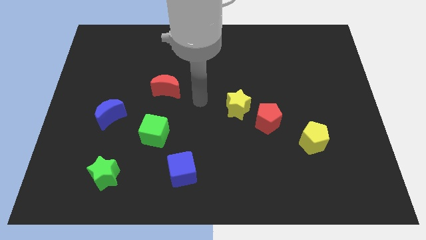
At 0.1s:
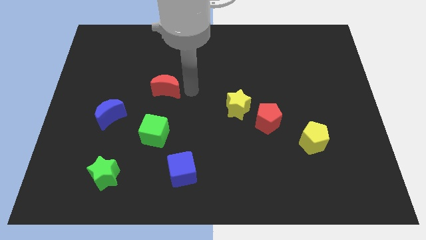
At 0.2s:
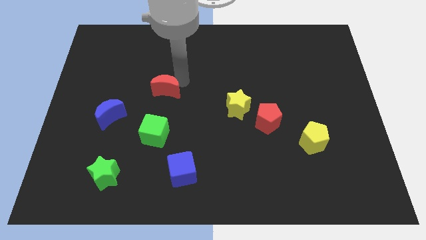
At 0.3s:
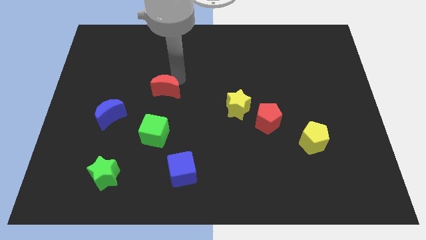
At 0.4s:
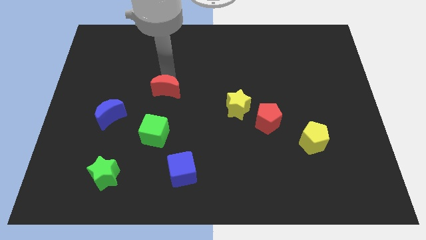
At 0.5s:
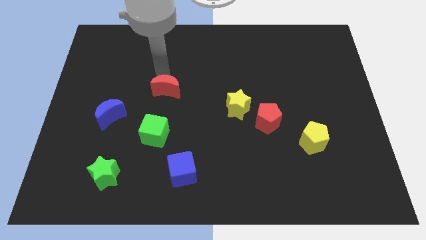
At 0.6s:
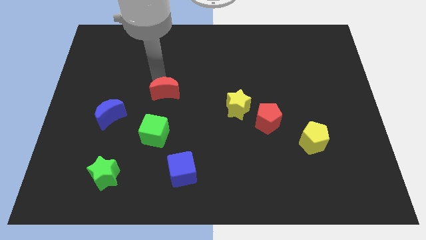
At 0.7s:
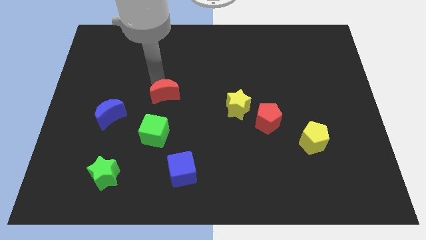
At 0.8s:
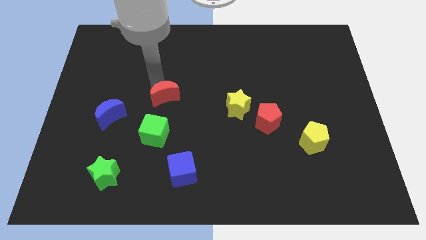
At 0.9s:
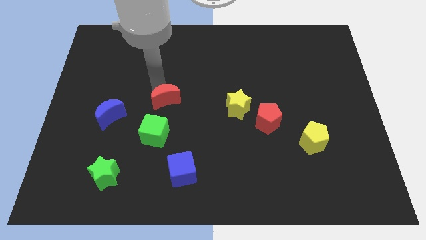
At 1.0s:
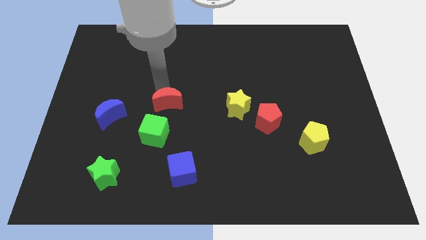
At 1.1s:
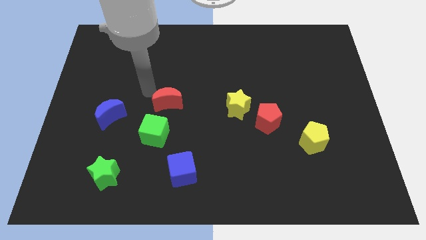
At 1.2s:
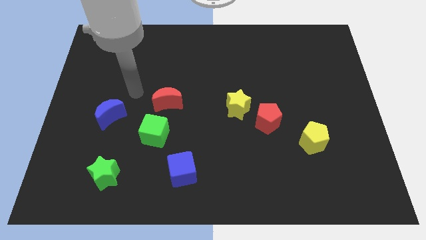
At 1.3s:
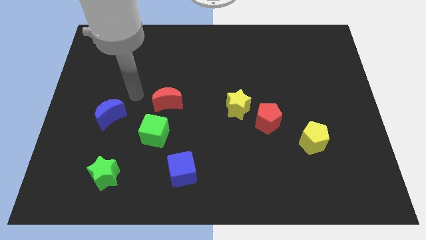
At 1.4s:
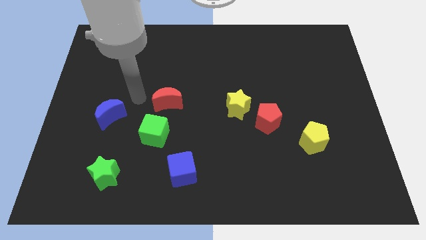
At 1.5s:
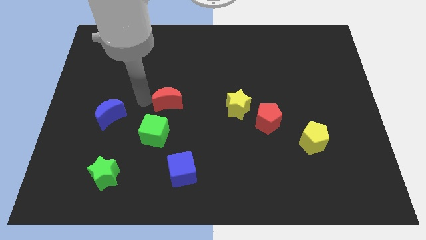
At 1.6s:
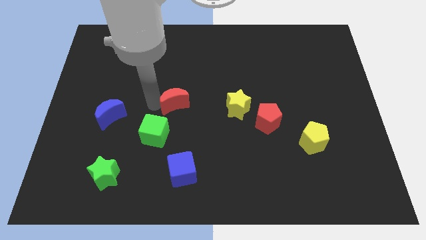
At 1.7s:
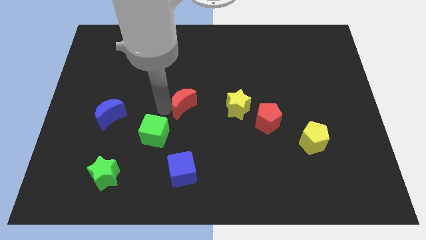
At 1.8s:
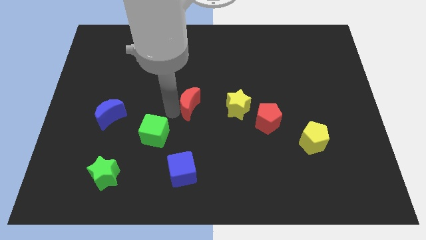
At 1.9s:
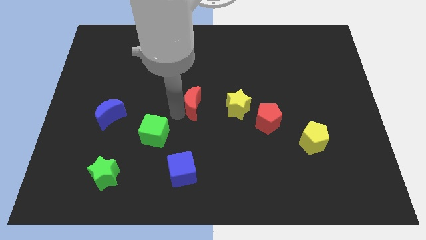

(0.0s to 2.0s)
move the red moon to the left of the yellow star

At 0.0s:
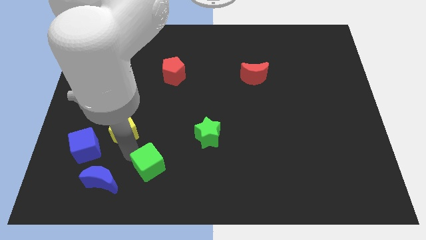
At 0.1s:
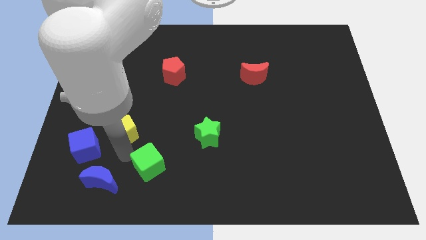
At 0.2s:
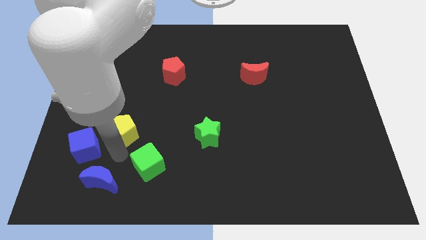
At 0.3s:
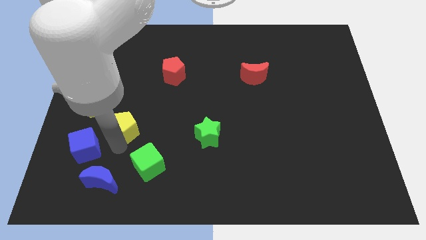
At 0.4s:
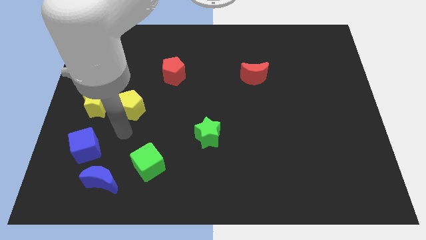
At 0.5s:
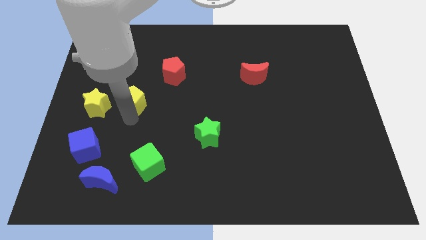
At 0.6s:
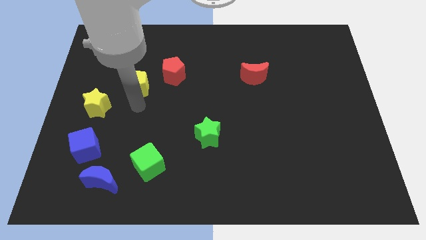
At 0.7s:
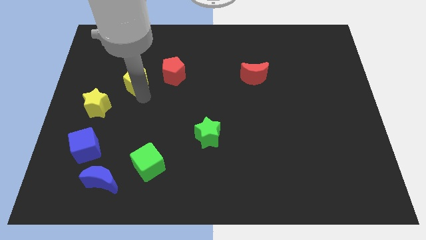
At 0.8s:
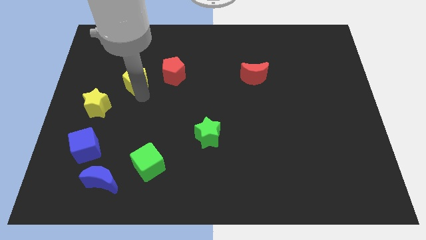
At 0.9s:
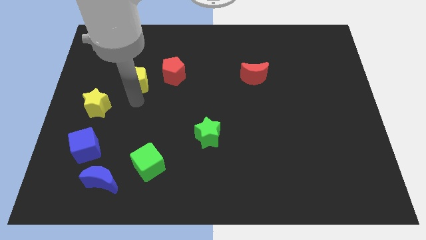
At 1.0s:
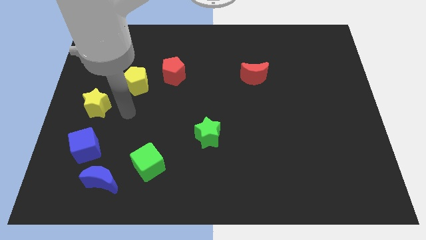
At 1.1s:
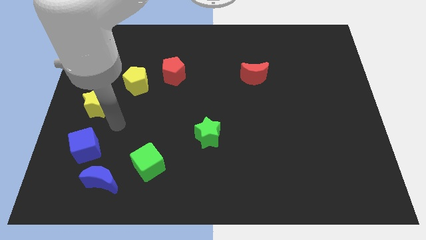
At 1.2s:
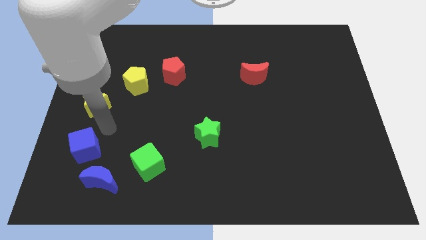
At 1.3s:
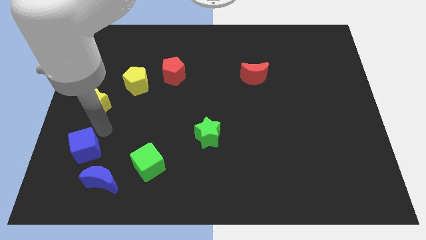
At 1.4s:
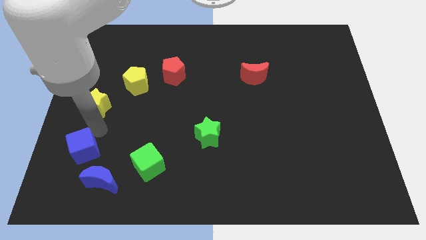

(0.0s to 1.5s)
move your arm away from the green cube

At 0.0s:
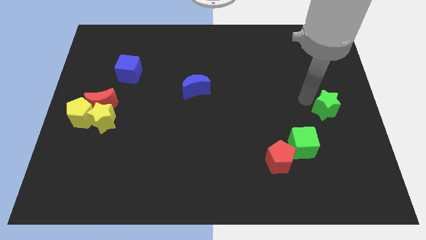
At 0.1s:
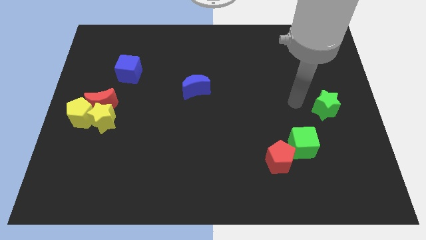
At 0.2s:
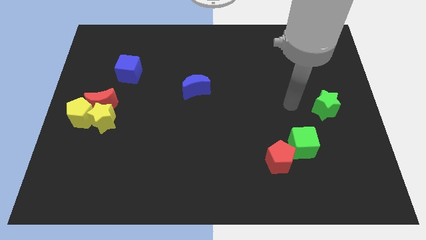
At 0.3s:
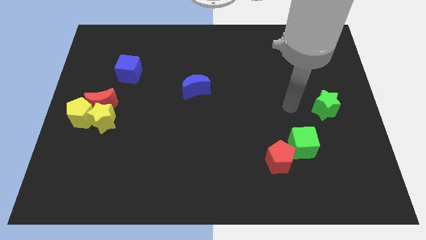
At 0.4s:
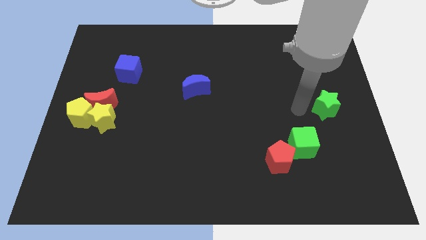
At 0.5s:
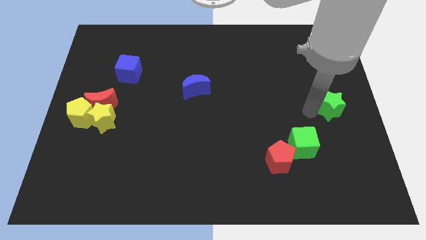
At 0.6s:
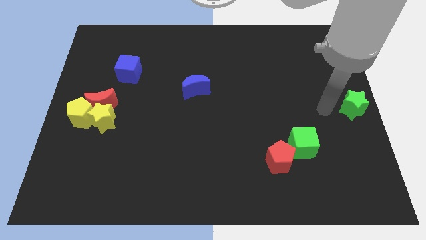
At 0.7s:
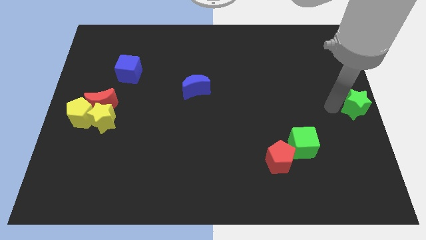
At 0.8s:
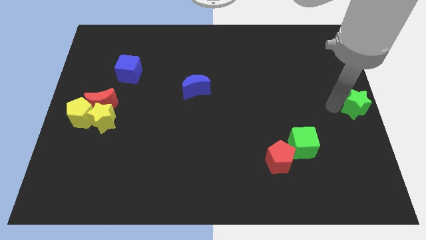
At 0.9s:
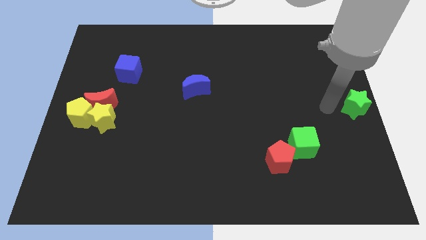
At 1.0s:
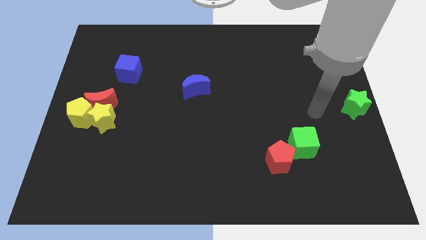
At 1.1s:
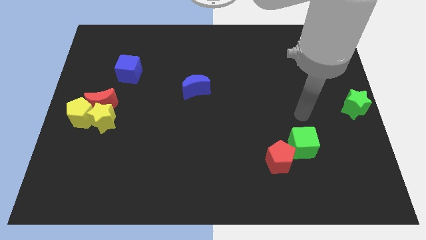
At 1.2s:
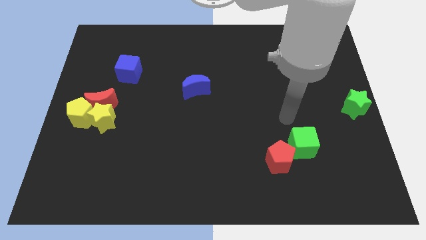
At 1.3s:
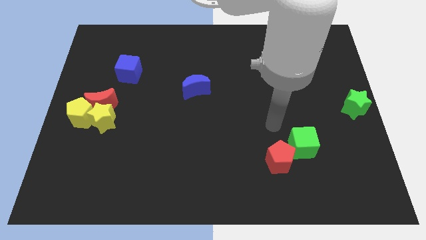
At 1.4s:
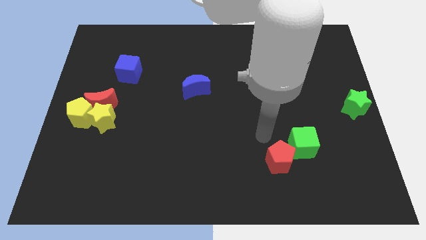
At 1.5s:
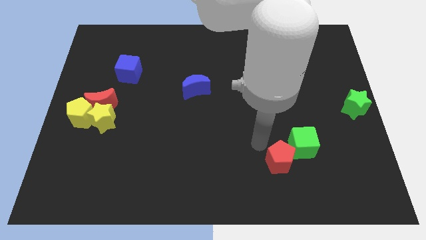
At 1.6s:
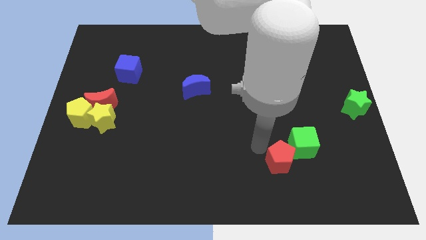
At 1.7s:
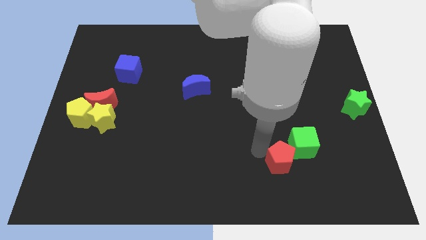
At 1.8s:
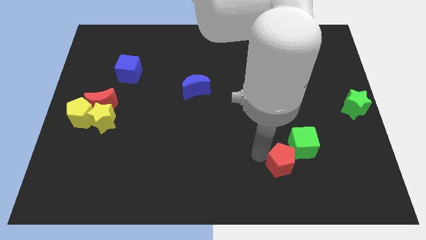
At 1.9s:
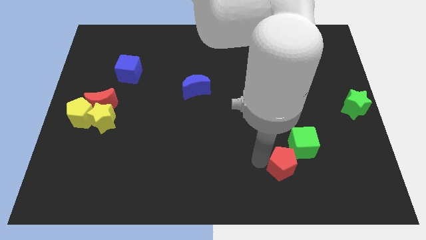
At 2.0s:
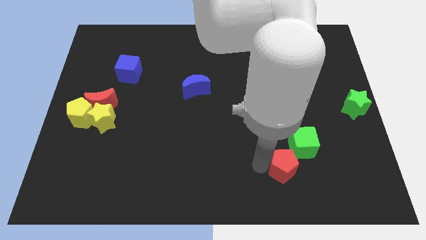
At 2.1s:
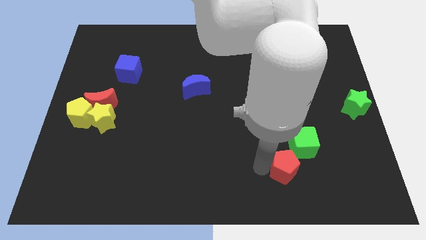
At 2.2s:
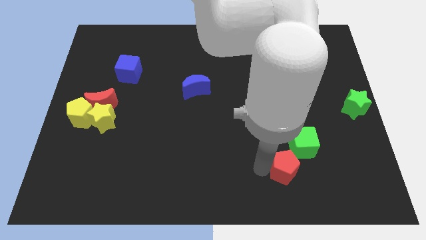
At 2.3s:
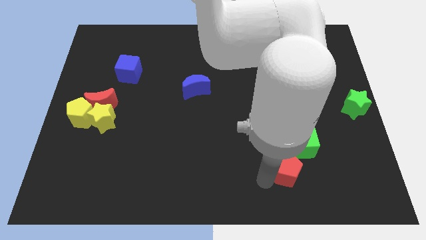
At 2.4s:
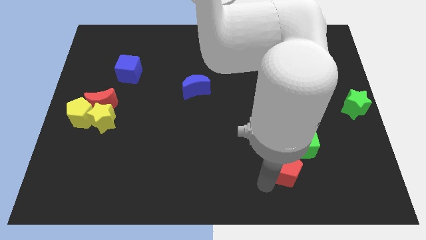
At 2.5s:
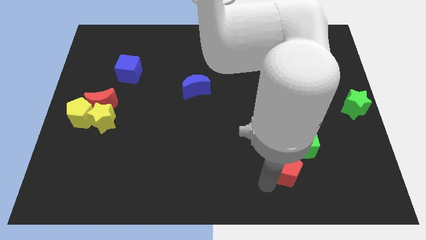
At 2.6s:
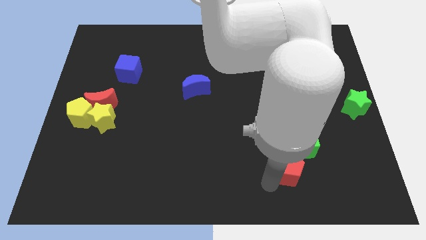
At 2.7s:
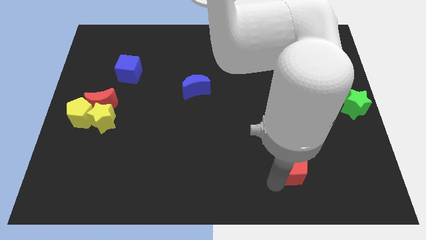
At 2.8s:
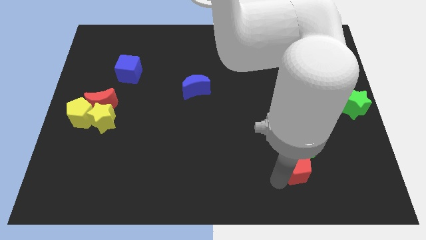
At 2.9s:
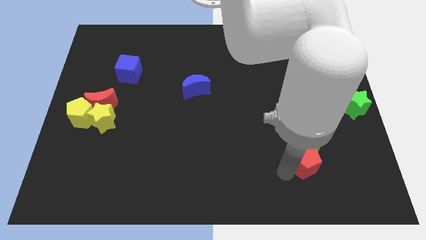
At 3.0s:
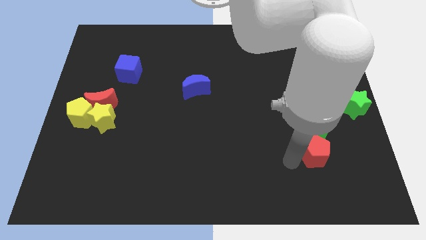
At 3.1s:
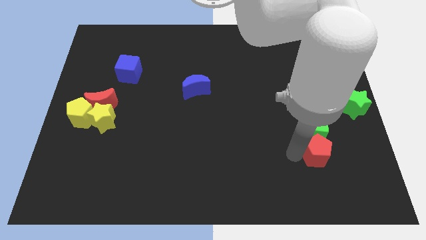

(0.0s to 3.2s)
push red pentagon below green cube

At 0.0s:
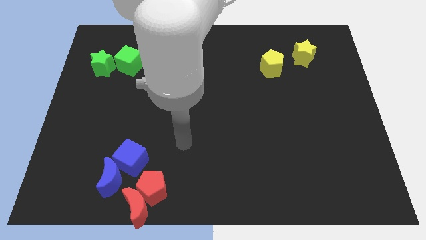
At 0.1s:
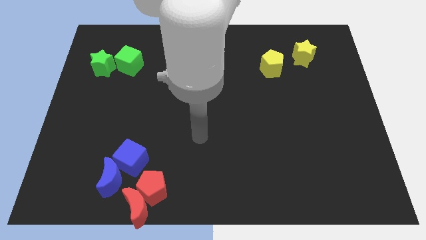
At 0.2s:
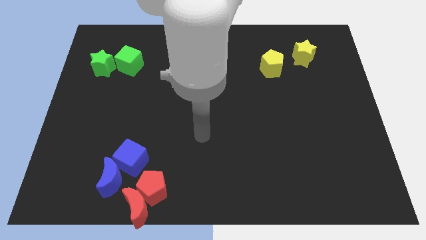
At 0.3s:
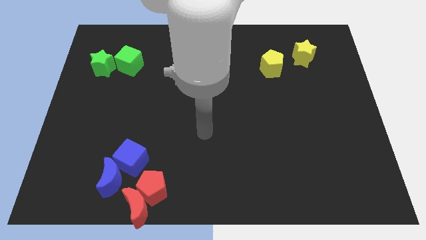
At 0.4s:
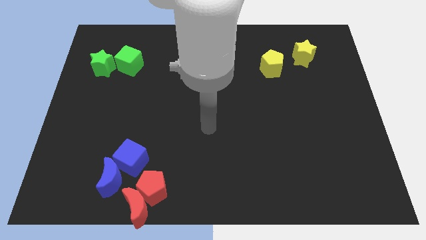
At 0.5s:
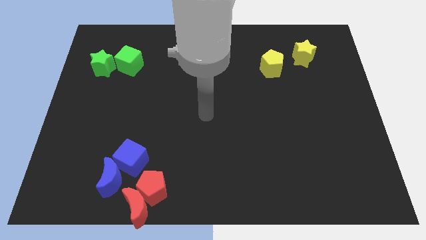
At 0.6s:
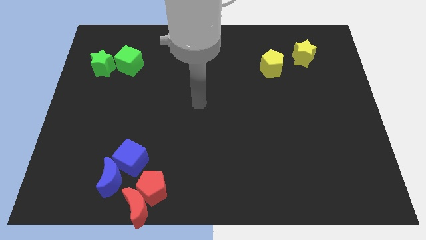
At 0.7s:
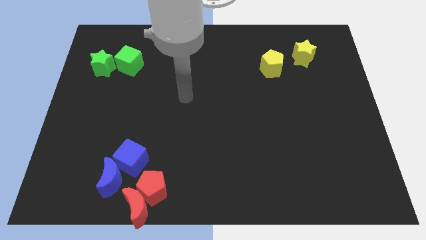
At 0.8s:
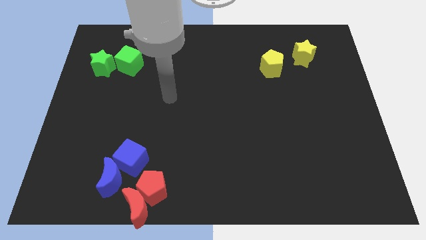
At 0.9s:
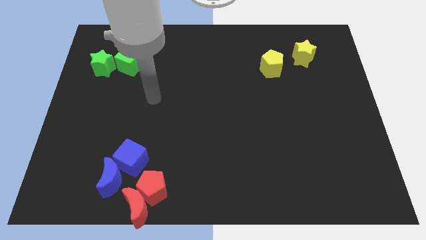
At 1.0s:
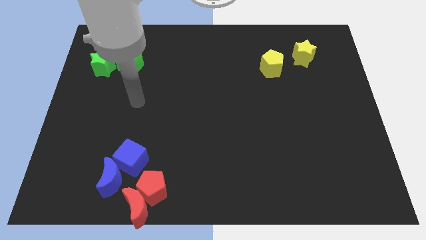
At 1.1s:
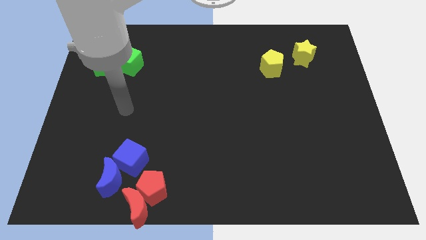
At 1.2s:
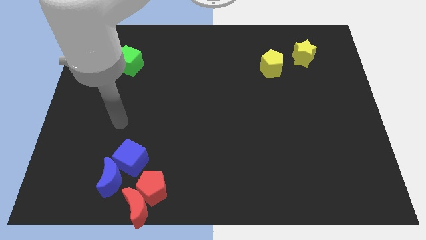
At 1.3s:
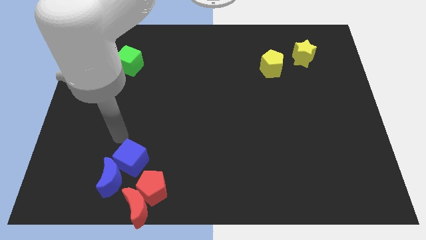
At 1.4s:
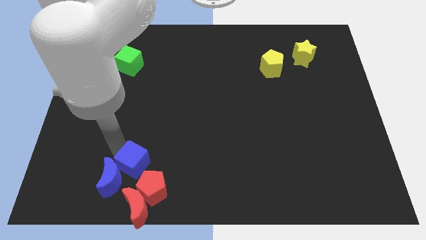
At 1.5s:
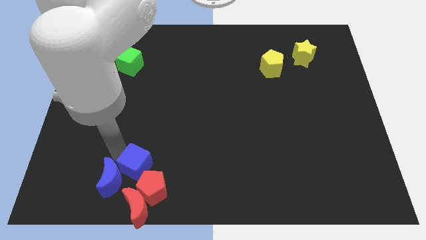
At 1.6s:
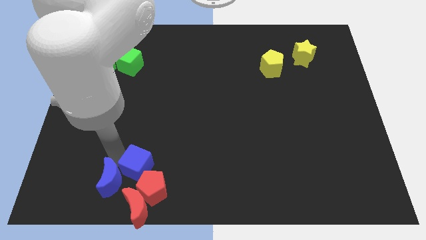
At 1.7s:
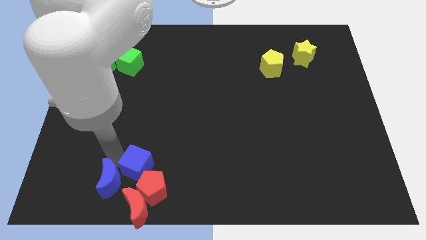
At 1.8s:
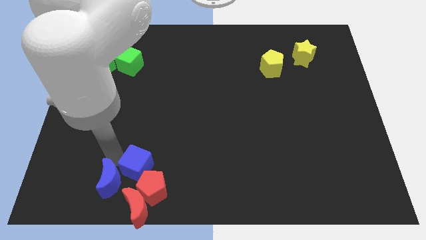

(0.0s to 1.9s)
slightly move blue cube into the red pentagon

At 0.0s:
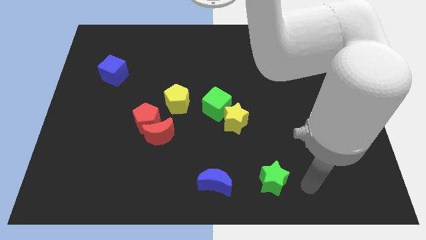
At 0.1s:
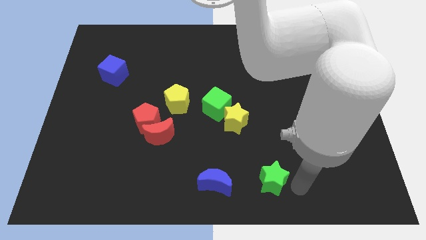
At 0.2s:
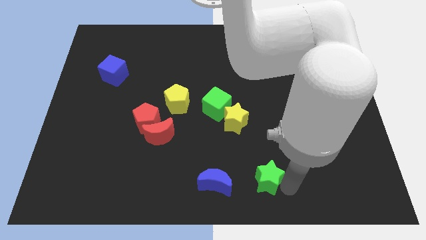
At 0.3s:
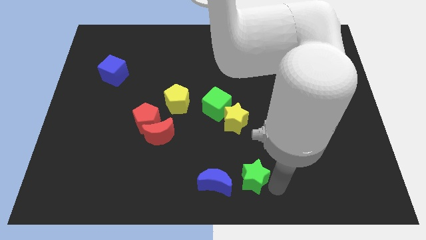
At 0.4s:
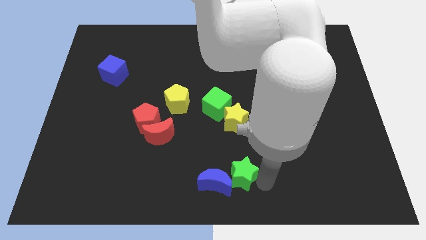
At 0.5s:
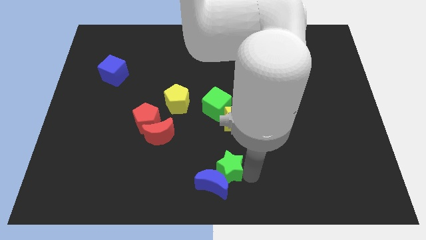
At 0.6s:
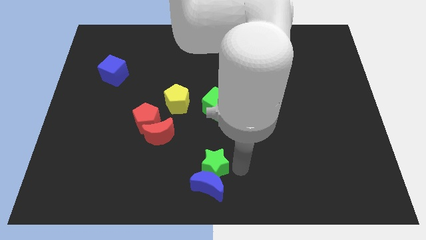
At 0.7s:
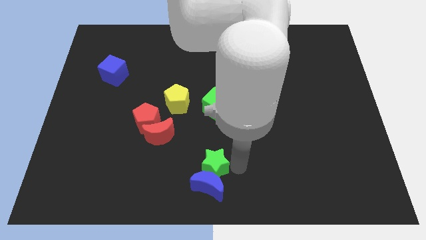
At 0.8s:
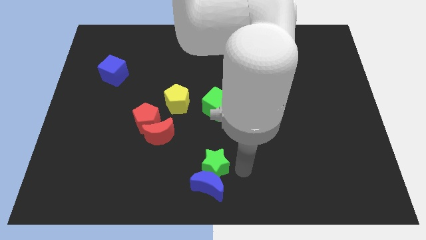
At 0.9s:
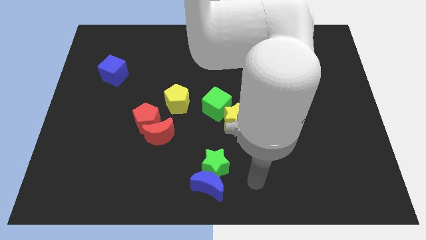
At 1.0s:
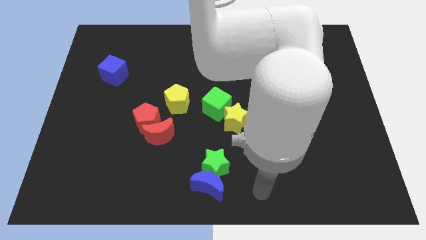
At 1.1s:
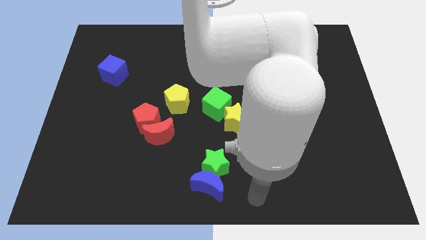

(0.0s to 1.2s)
move green star close to the blue moon
